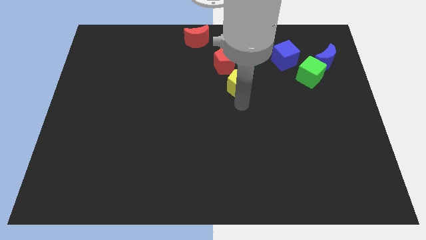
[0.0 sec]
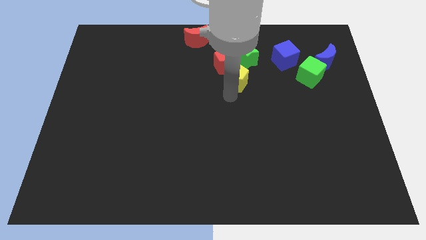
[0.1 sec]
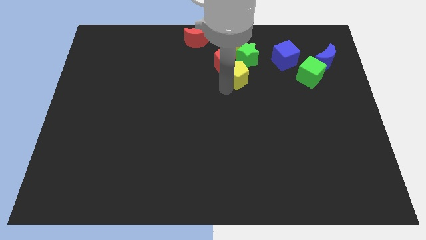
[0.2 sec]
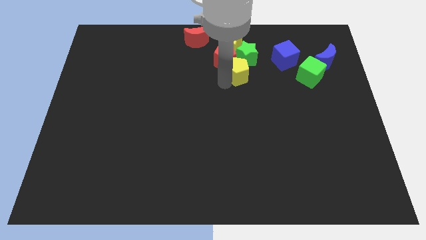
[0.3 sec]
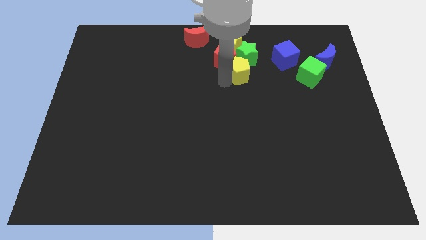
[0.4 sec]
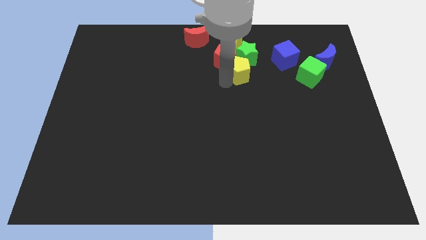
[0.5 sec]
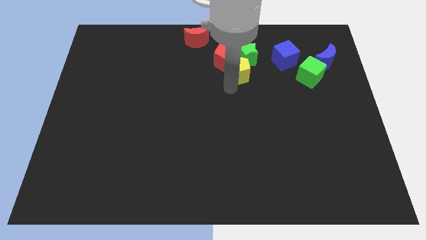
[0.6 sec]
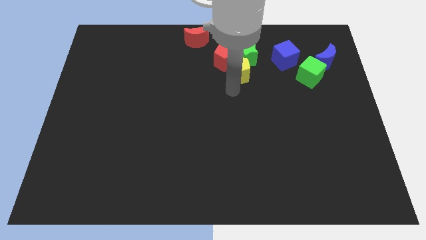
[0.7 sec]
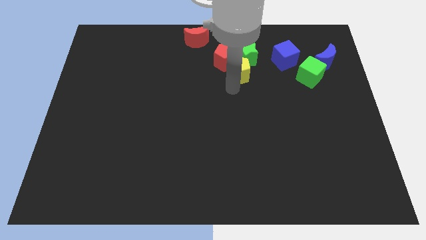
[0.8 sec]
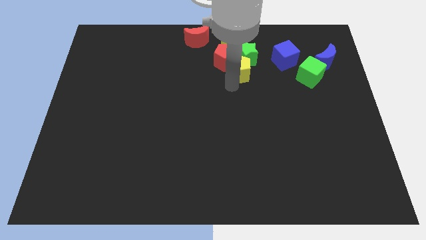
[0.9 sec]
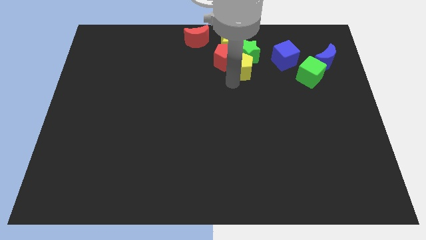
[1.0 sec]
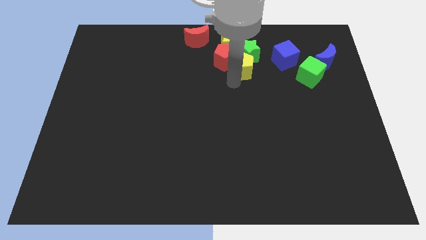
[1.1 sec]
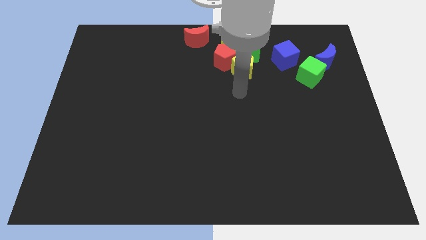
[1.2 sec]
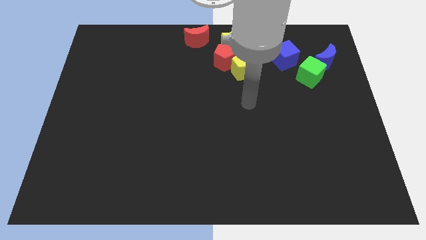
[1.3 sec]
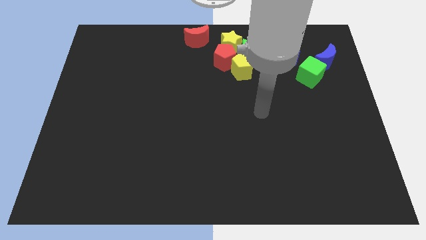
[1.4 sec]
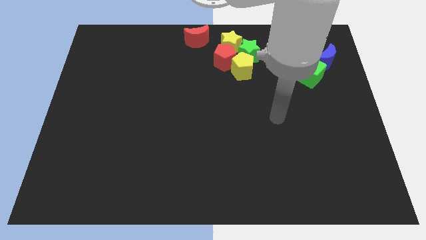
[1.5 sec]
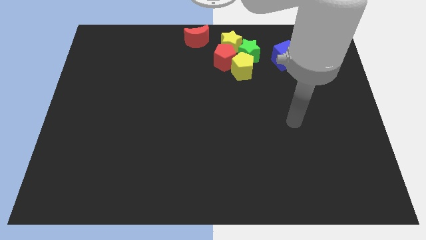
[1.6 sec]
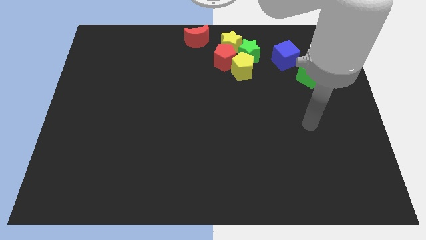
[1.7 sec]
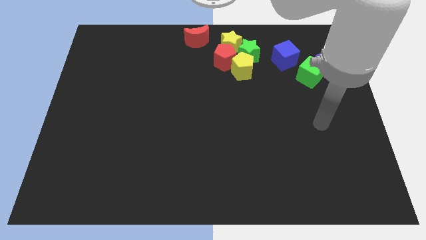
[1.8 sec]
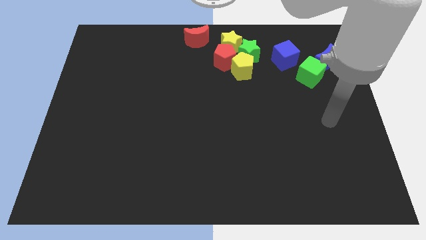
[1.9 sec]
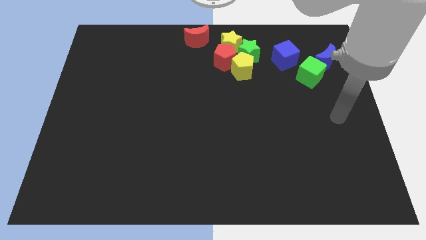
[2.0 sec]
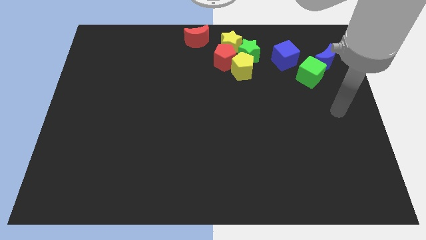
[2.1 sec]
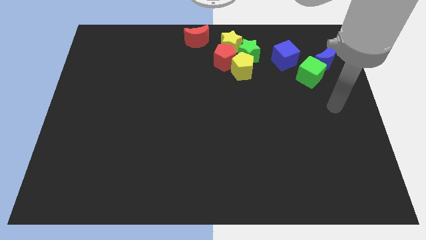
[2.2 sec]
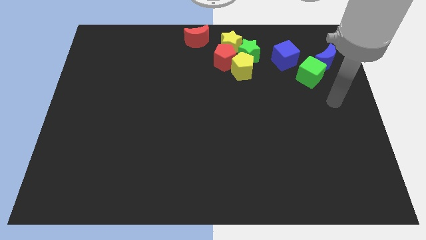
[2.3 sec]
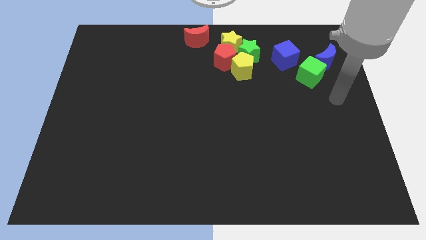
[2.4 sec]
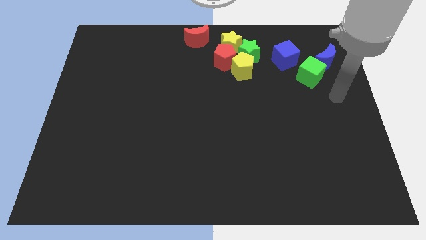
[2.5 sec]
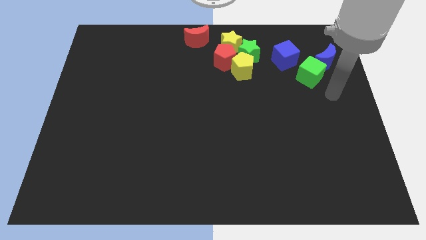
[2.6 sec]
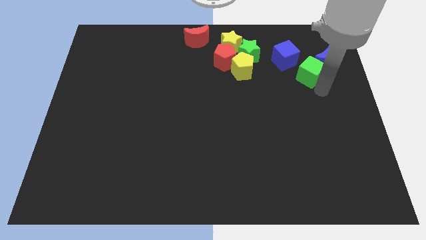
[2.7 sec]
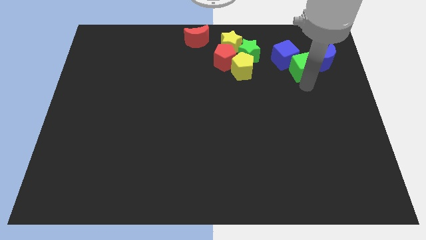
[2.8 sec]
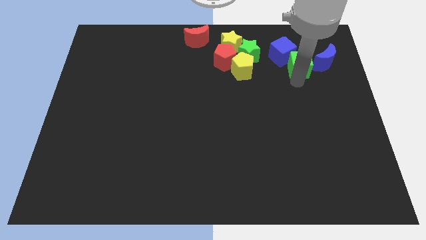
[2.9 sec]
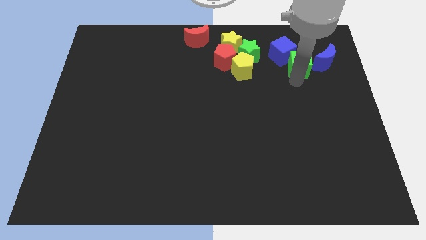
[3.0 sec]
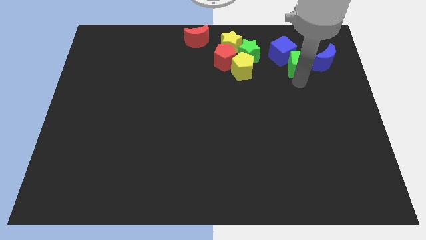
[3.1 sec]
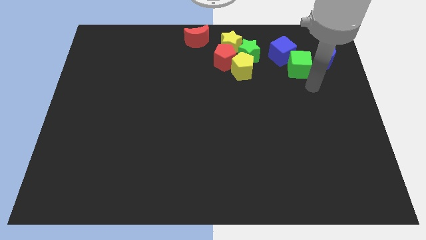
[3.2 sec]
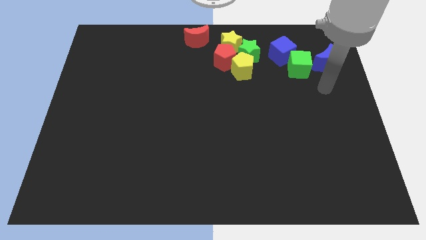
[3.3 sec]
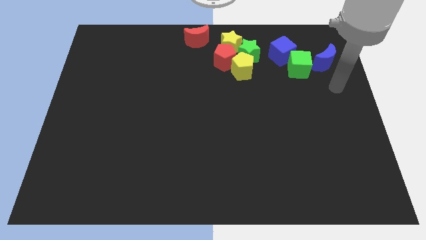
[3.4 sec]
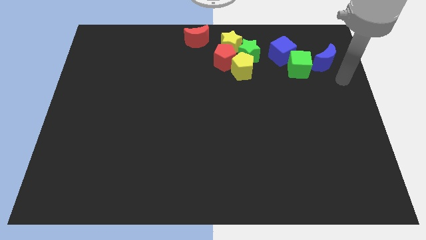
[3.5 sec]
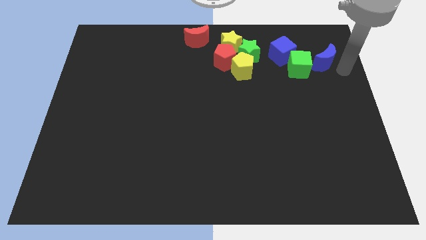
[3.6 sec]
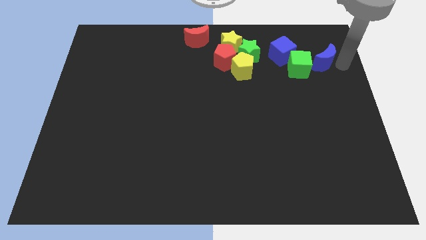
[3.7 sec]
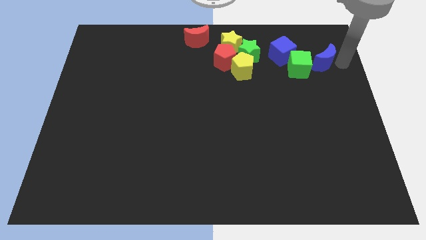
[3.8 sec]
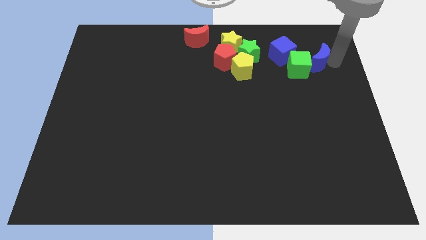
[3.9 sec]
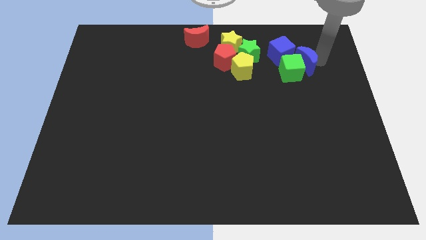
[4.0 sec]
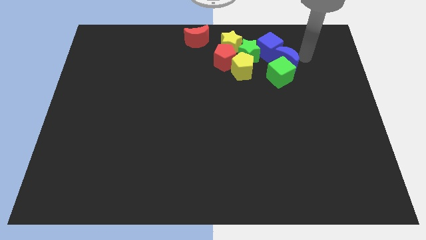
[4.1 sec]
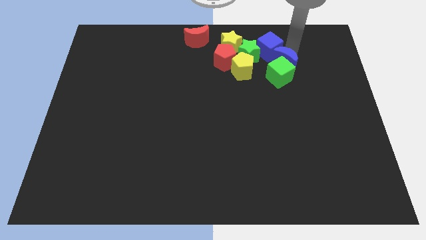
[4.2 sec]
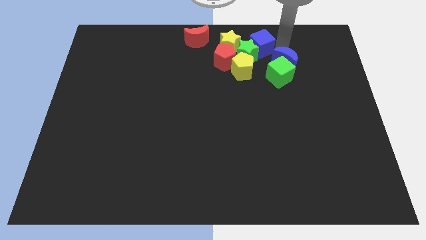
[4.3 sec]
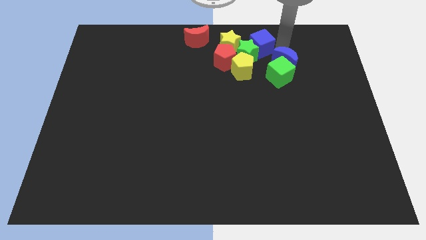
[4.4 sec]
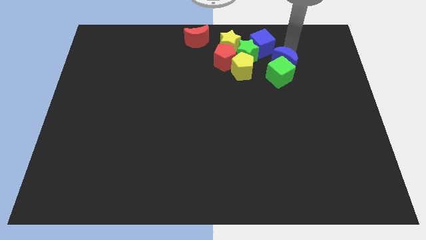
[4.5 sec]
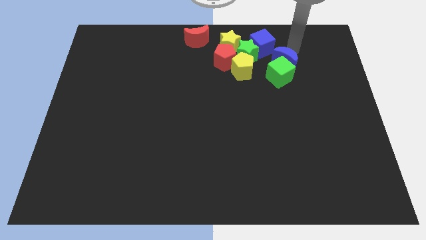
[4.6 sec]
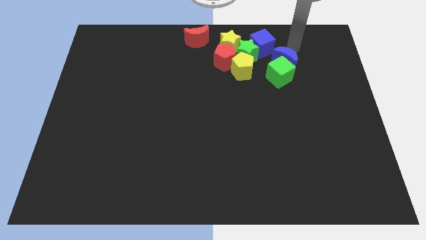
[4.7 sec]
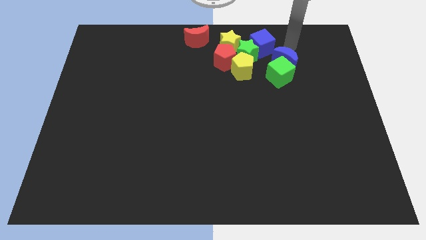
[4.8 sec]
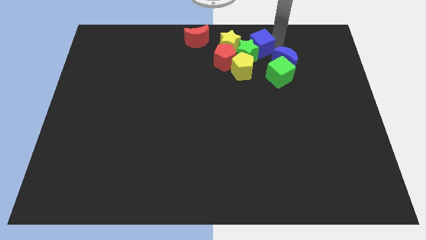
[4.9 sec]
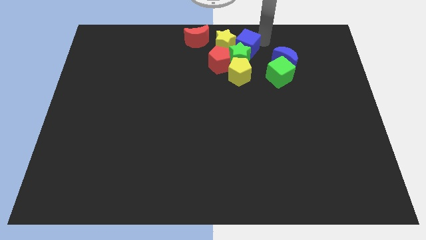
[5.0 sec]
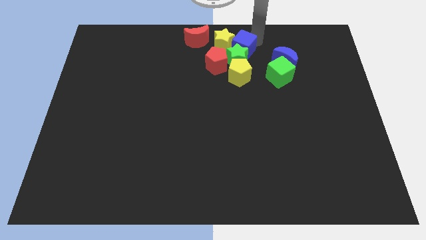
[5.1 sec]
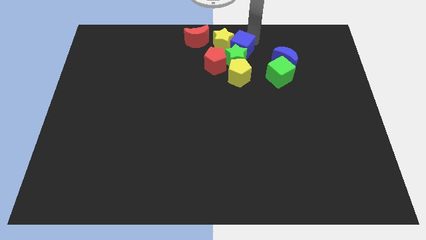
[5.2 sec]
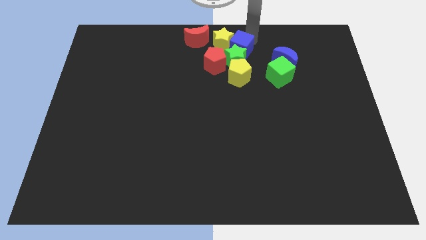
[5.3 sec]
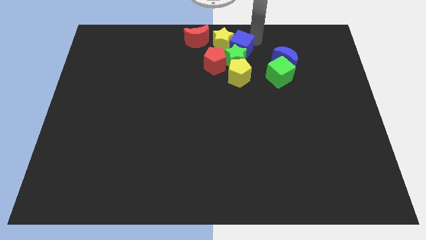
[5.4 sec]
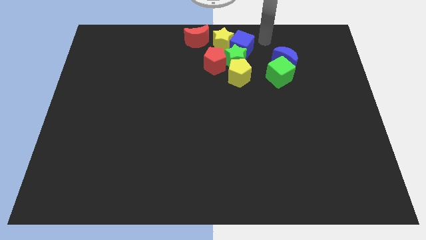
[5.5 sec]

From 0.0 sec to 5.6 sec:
adjust the yellow pentagon

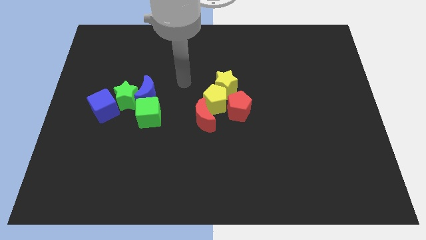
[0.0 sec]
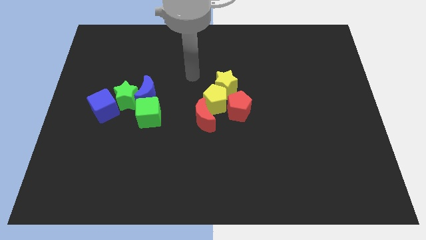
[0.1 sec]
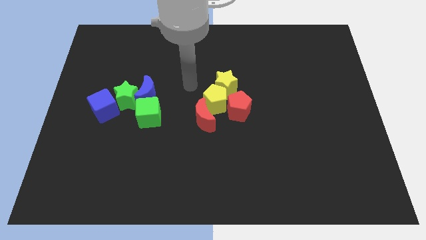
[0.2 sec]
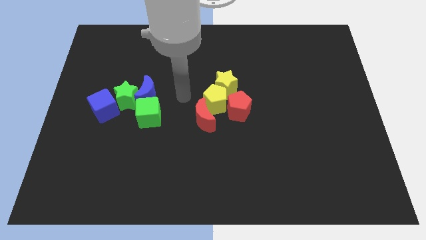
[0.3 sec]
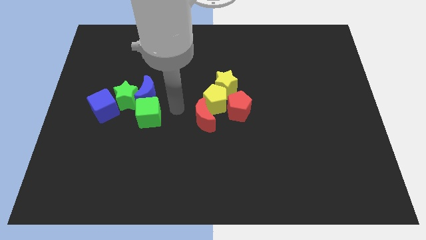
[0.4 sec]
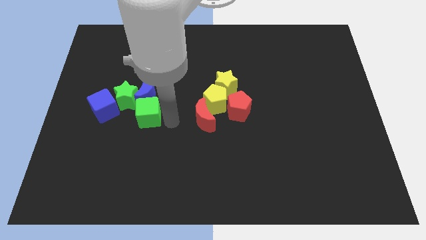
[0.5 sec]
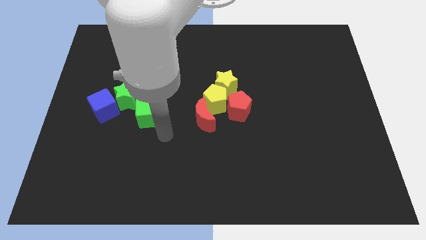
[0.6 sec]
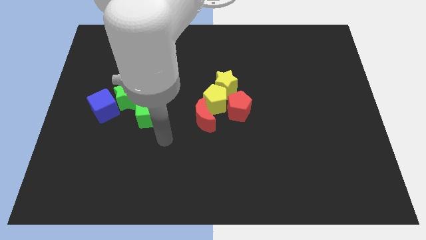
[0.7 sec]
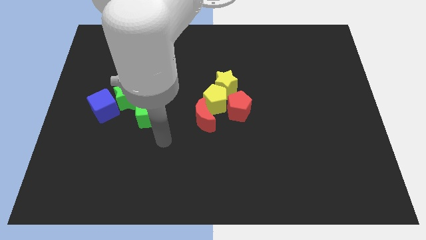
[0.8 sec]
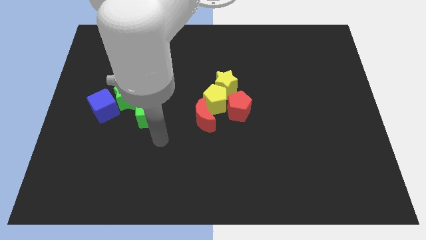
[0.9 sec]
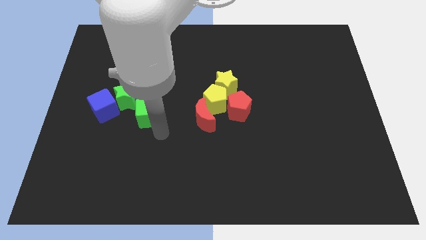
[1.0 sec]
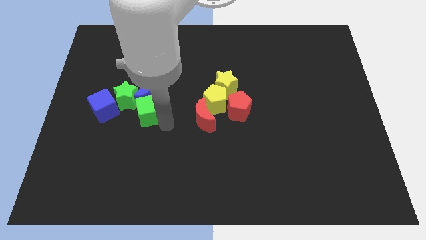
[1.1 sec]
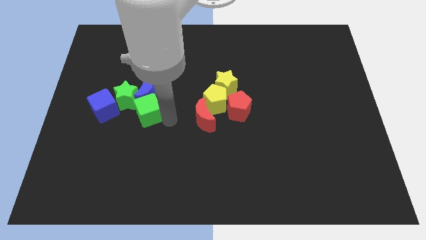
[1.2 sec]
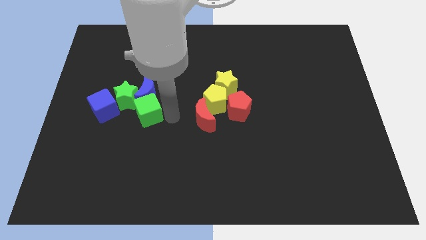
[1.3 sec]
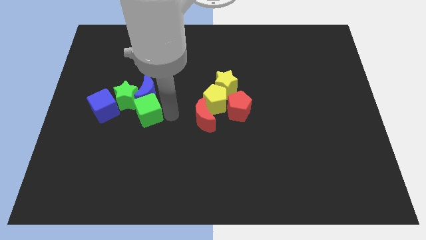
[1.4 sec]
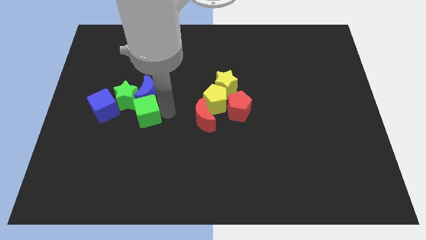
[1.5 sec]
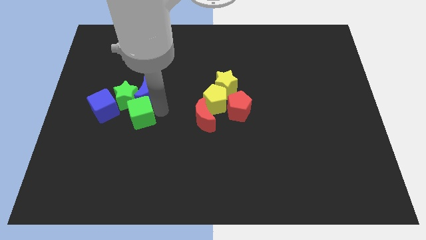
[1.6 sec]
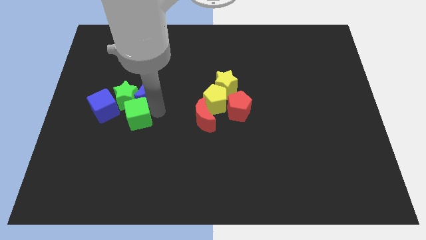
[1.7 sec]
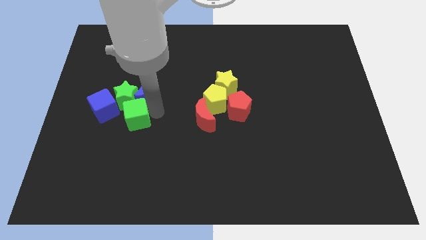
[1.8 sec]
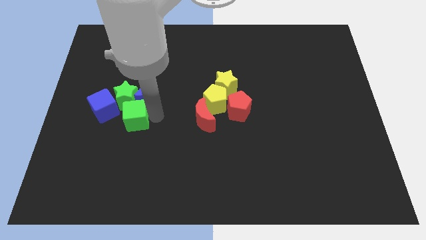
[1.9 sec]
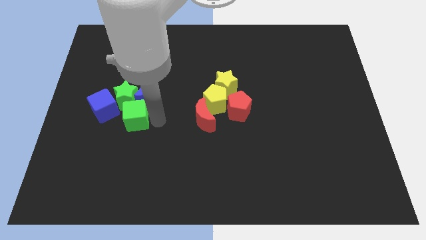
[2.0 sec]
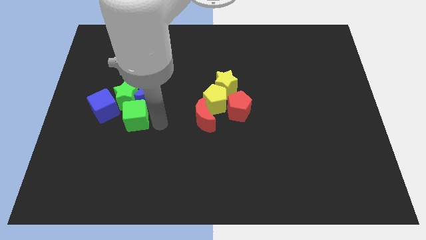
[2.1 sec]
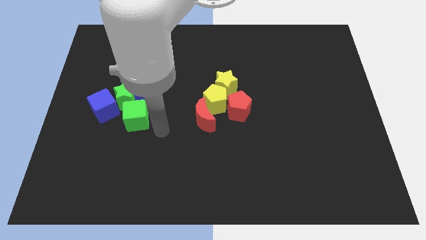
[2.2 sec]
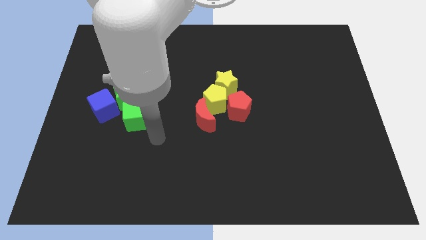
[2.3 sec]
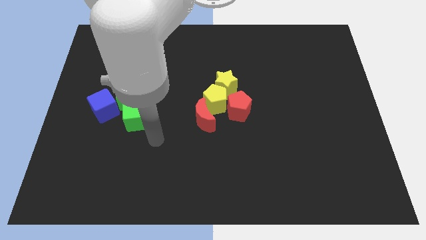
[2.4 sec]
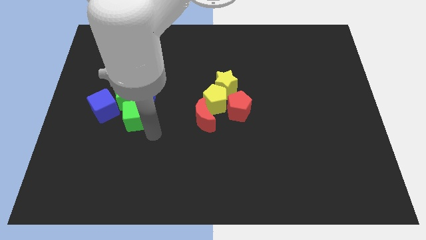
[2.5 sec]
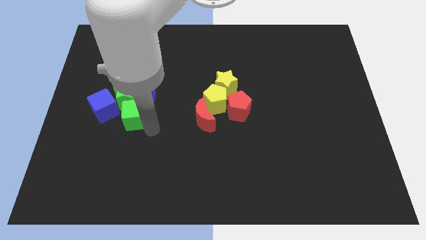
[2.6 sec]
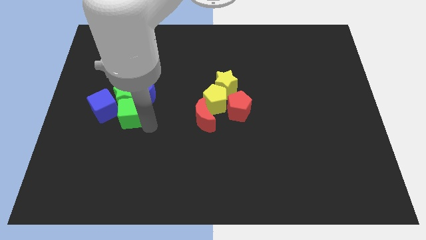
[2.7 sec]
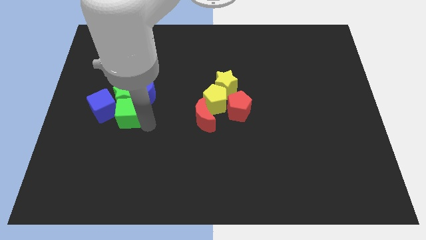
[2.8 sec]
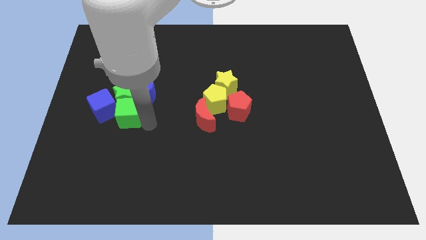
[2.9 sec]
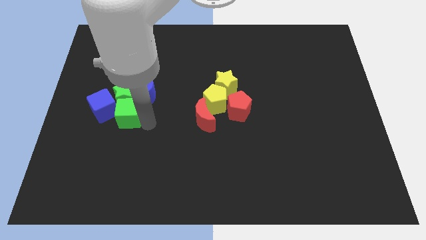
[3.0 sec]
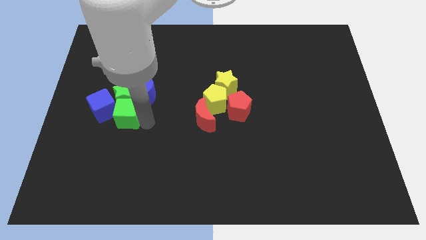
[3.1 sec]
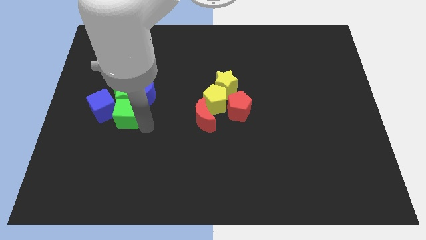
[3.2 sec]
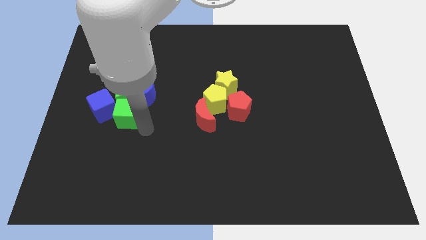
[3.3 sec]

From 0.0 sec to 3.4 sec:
make a group of green and blue blocks
